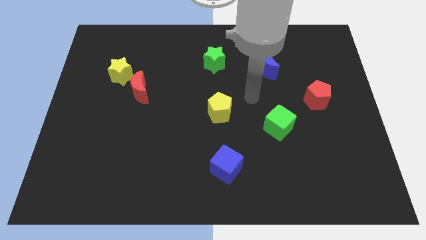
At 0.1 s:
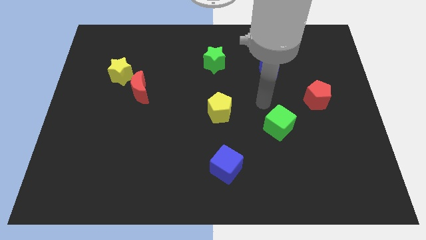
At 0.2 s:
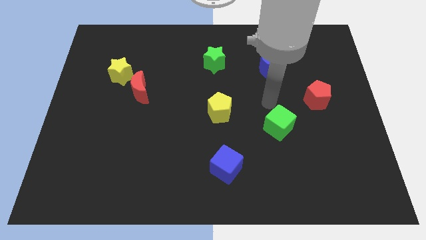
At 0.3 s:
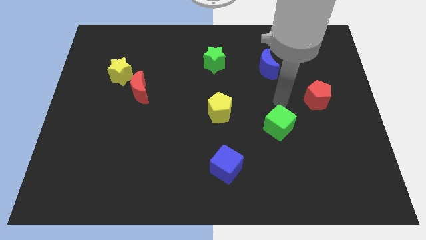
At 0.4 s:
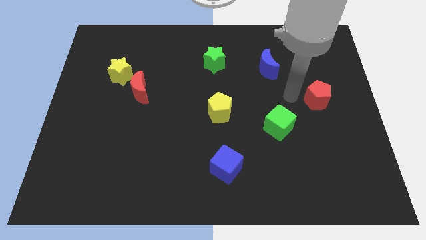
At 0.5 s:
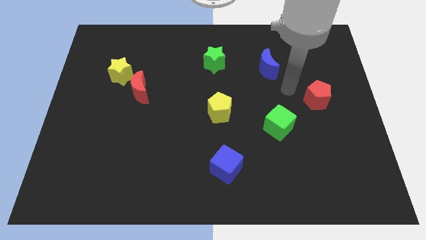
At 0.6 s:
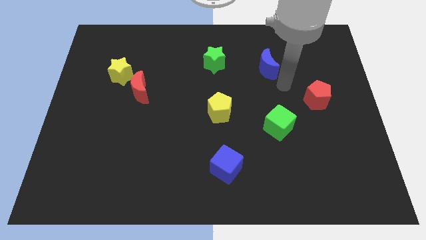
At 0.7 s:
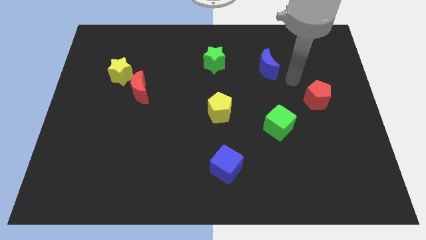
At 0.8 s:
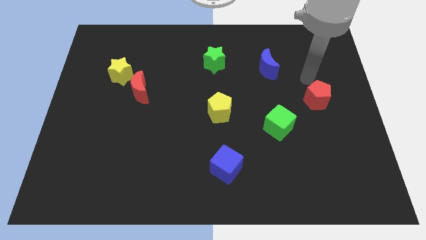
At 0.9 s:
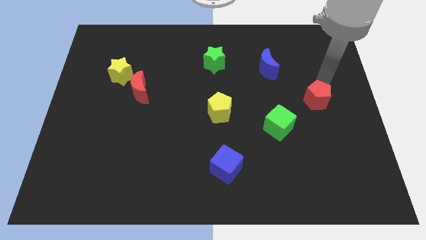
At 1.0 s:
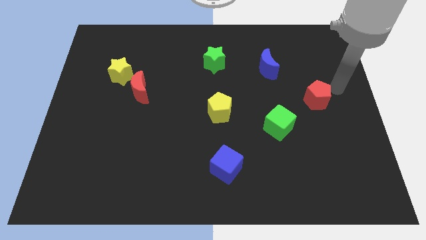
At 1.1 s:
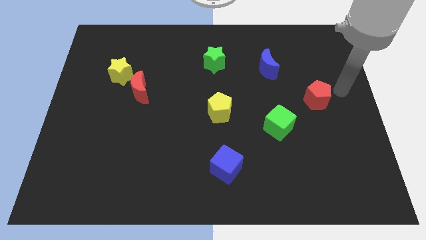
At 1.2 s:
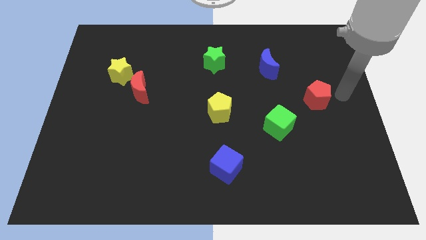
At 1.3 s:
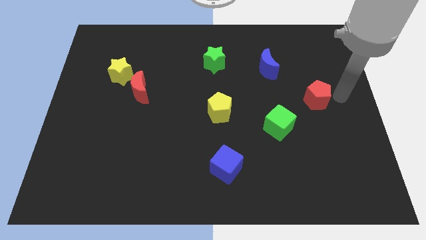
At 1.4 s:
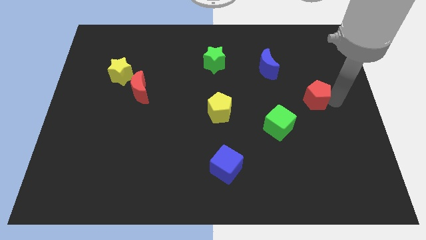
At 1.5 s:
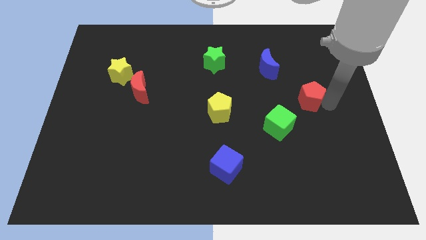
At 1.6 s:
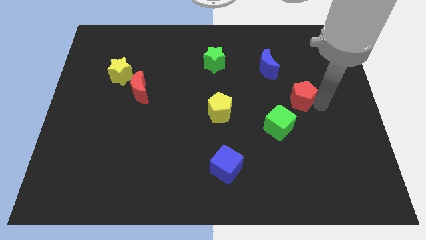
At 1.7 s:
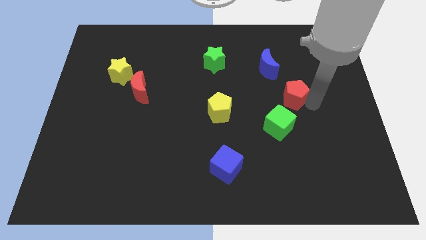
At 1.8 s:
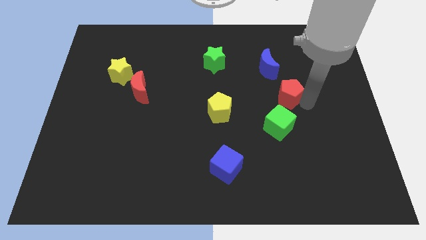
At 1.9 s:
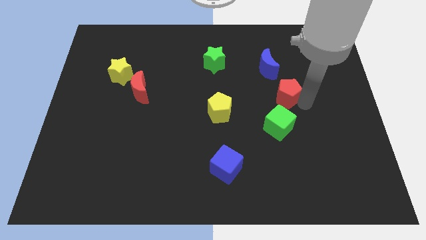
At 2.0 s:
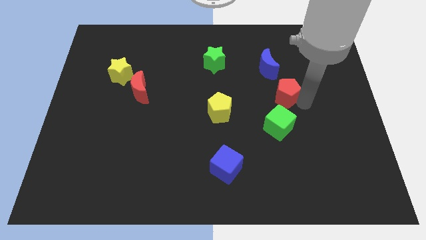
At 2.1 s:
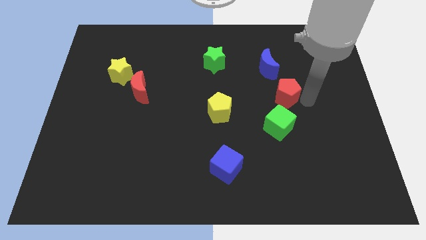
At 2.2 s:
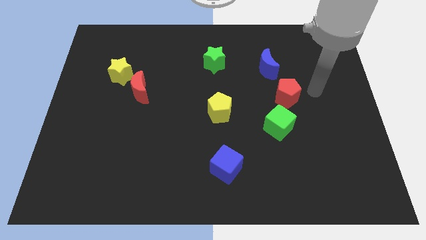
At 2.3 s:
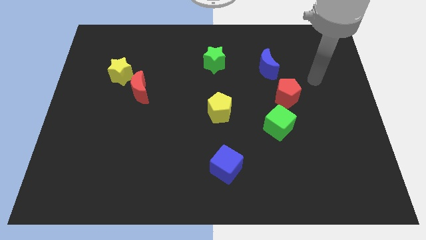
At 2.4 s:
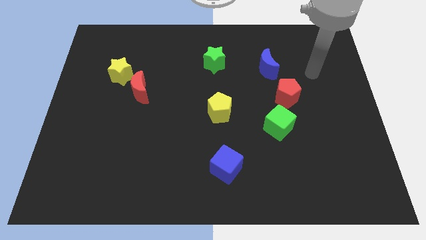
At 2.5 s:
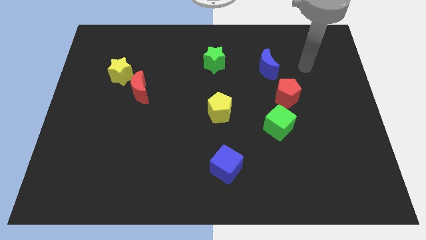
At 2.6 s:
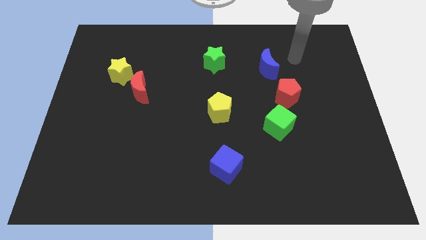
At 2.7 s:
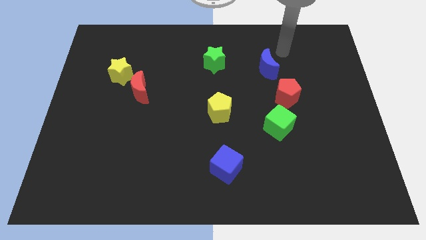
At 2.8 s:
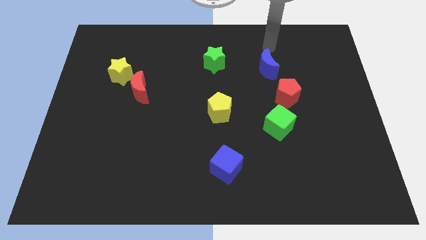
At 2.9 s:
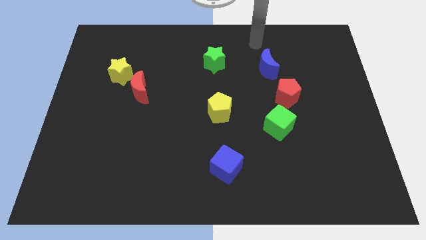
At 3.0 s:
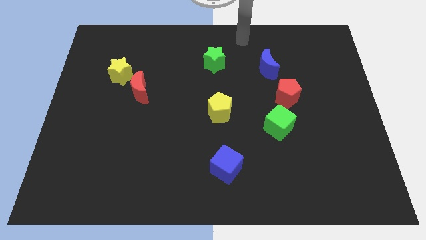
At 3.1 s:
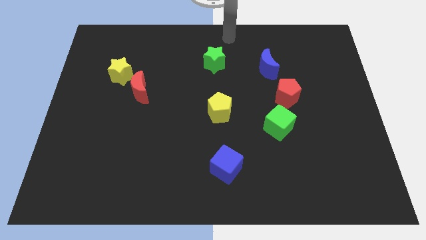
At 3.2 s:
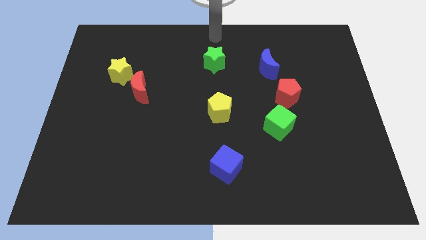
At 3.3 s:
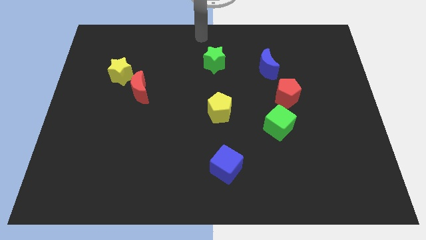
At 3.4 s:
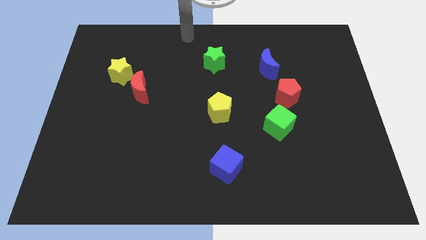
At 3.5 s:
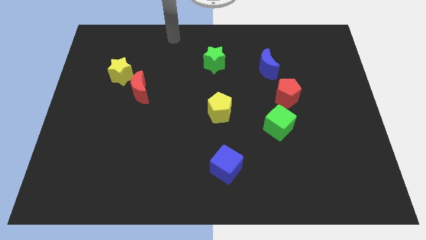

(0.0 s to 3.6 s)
move the red pentagon to the top right side of the green cube

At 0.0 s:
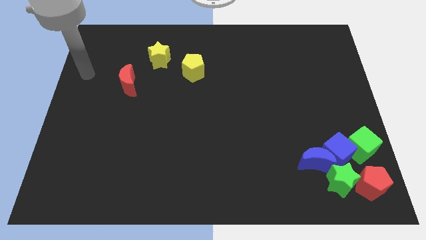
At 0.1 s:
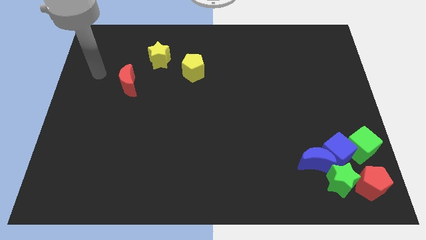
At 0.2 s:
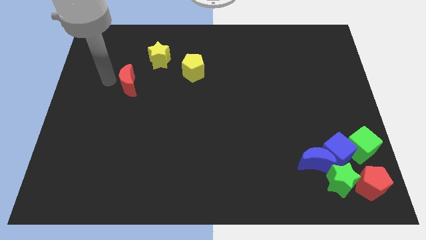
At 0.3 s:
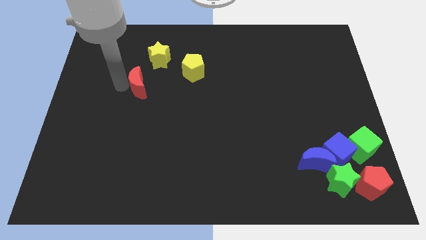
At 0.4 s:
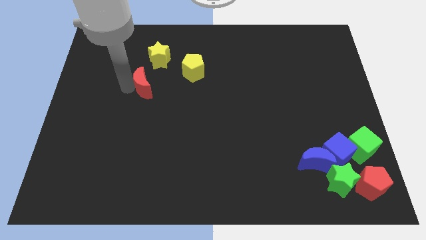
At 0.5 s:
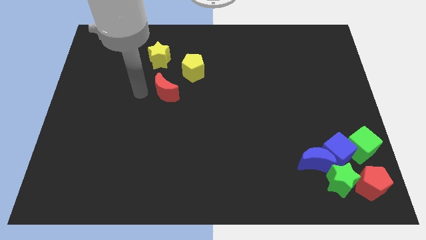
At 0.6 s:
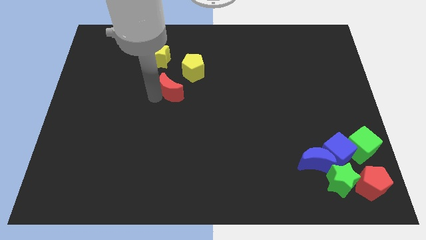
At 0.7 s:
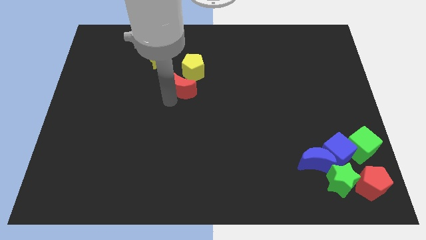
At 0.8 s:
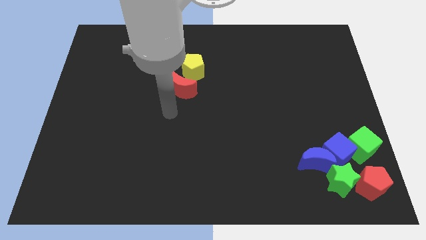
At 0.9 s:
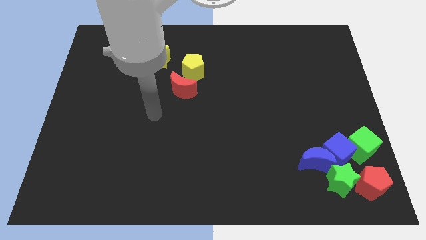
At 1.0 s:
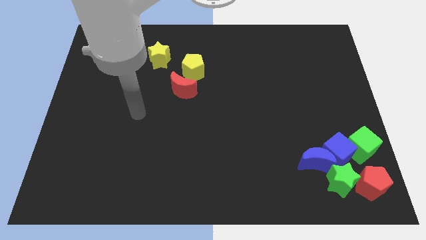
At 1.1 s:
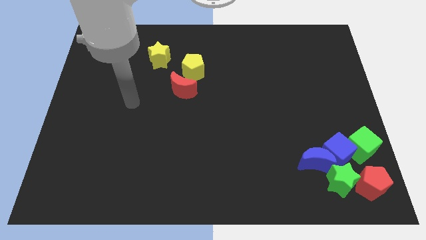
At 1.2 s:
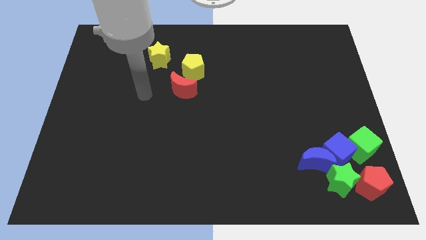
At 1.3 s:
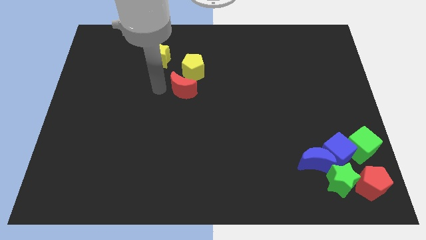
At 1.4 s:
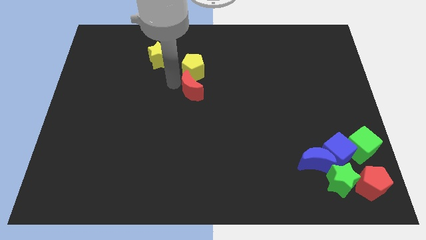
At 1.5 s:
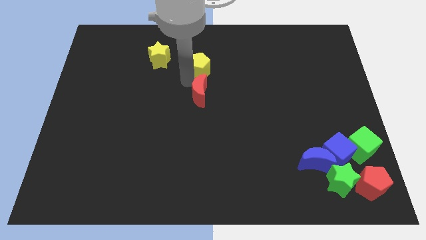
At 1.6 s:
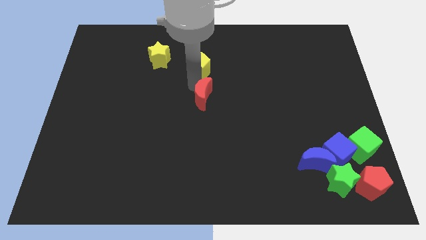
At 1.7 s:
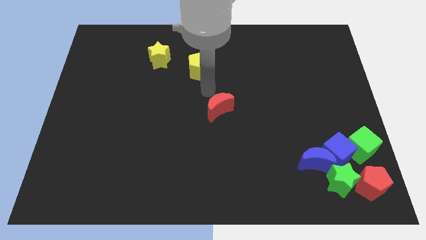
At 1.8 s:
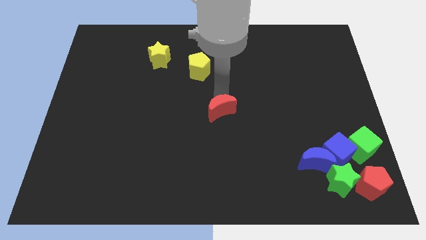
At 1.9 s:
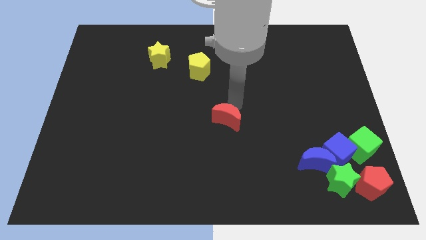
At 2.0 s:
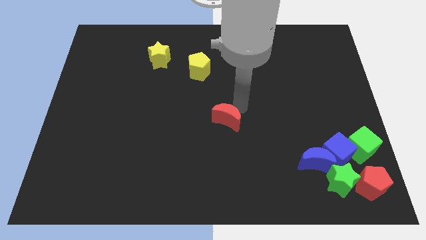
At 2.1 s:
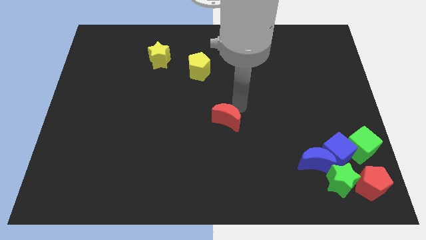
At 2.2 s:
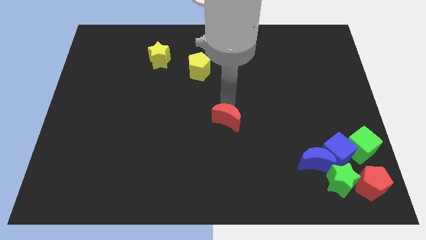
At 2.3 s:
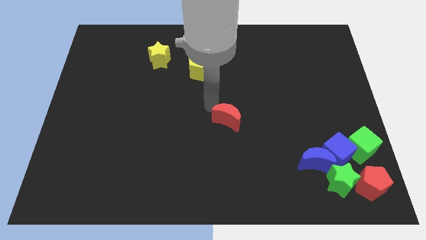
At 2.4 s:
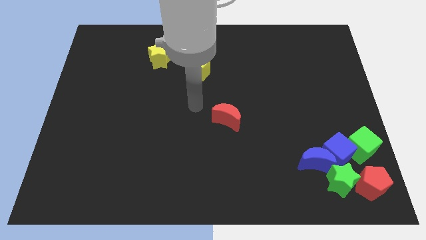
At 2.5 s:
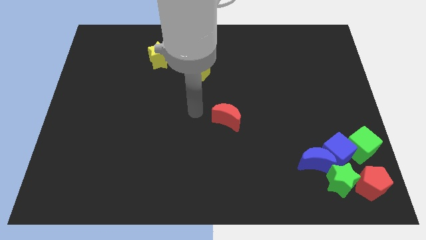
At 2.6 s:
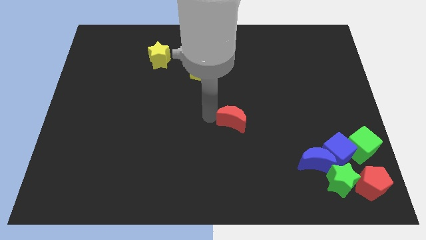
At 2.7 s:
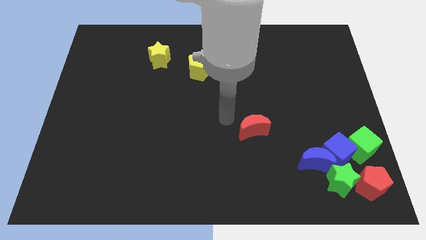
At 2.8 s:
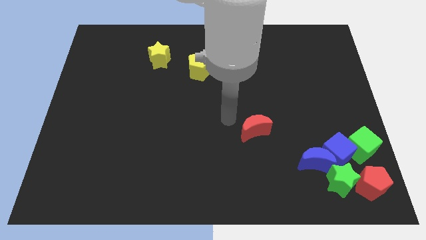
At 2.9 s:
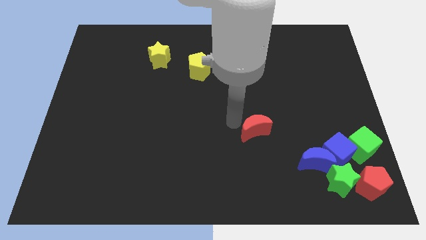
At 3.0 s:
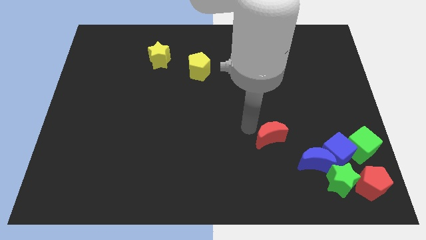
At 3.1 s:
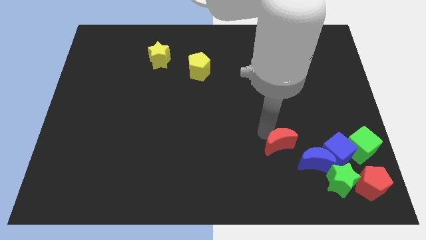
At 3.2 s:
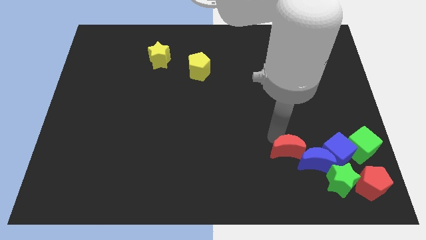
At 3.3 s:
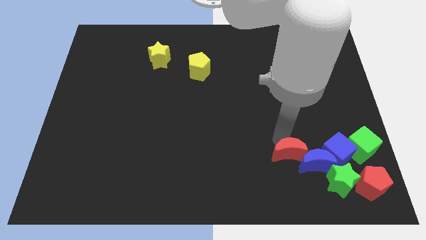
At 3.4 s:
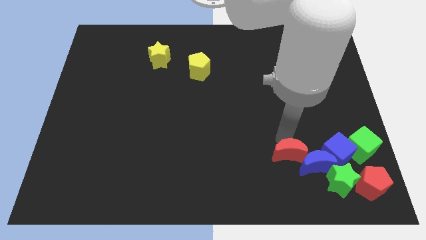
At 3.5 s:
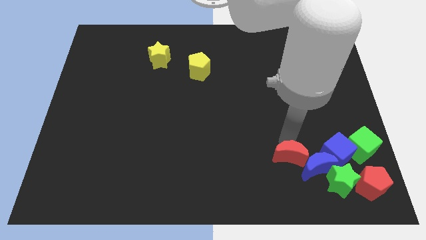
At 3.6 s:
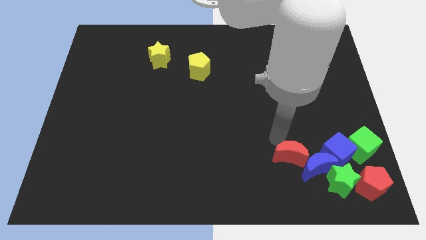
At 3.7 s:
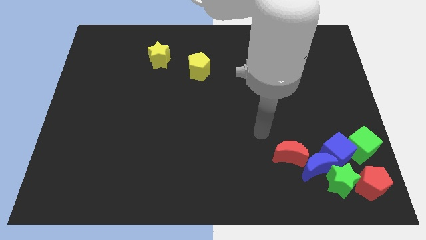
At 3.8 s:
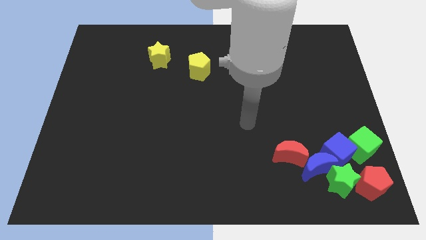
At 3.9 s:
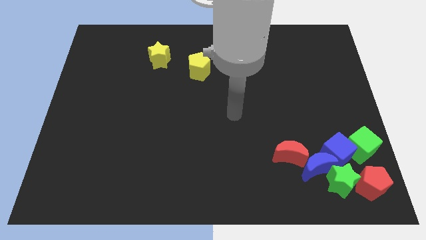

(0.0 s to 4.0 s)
place the red moon into blue moon at the top

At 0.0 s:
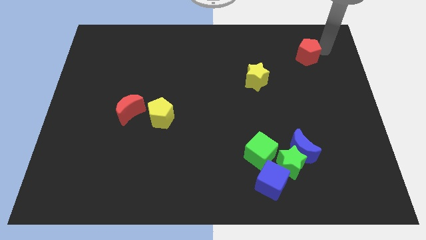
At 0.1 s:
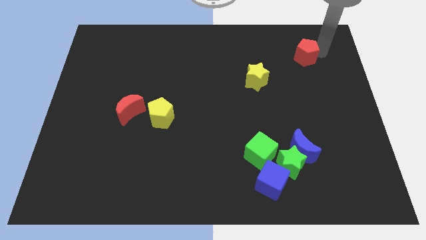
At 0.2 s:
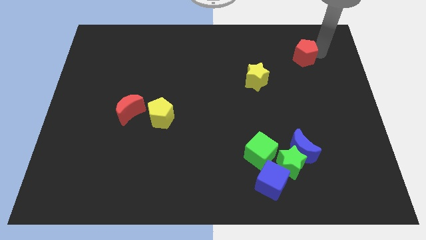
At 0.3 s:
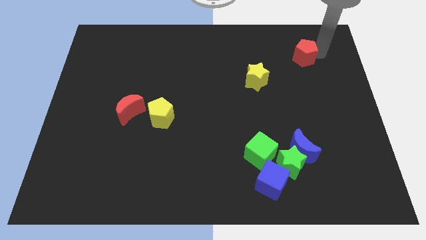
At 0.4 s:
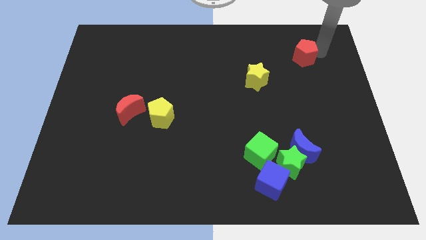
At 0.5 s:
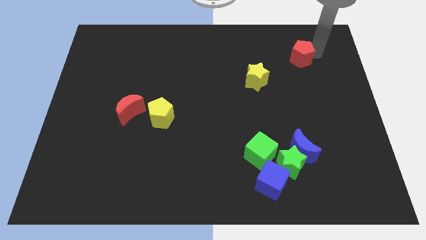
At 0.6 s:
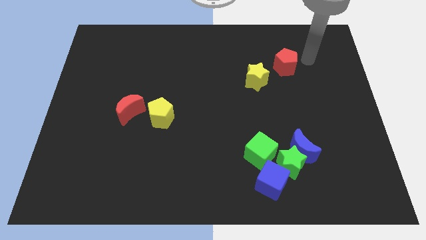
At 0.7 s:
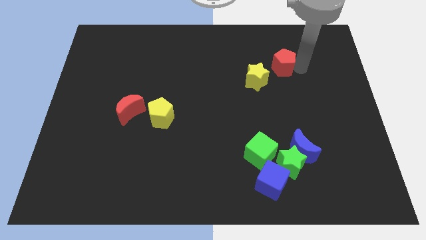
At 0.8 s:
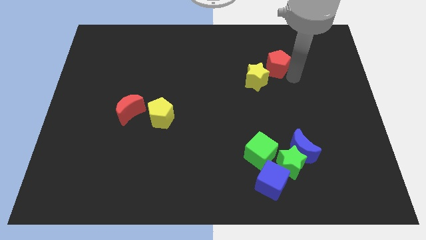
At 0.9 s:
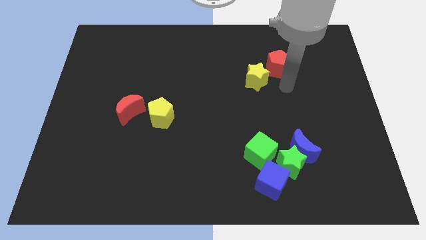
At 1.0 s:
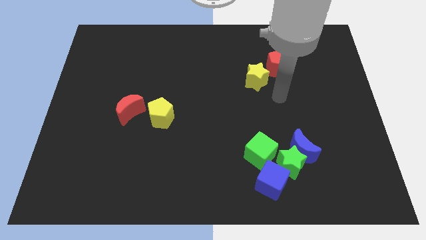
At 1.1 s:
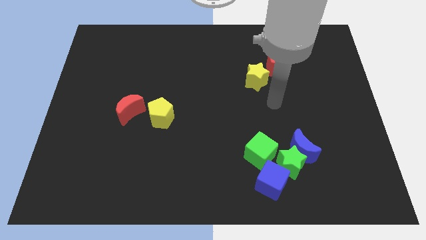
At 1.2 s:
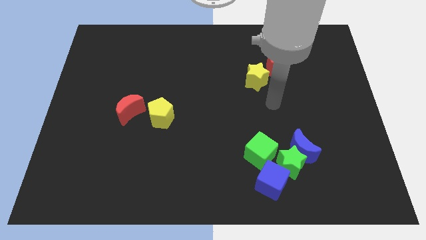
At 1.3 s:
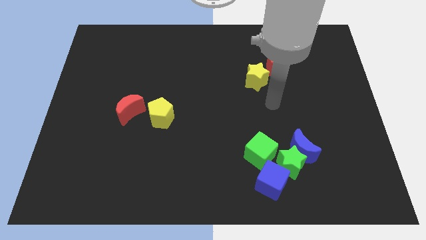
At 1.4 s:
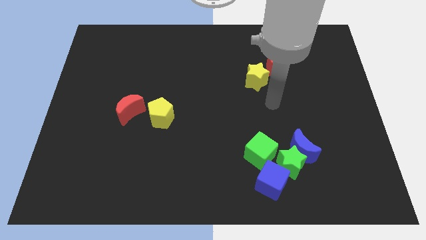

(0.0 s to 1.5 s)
push the red pentagon towards the yellow star
